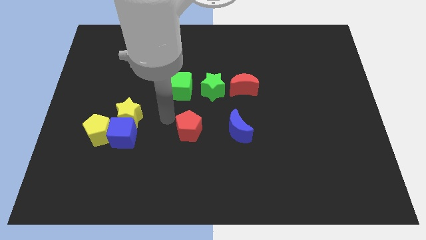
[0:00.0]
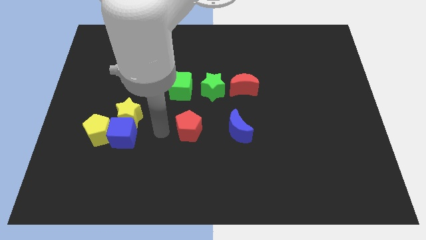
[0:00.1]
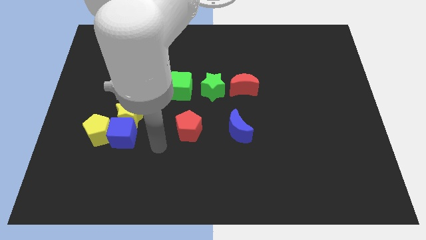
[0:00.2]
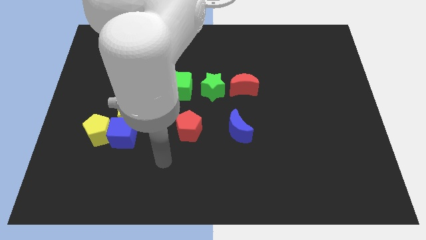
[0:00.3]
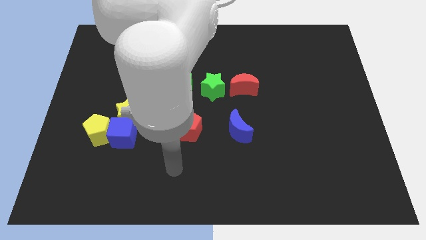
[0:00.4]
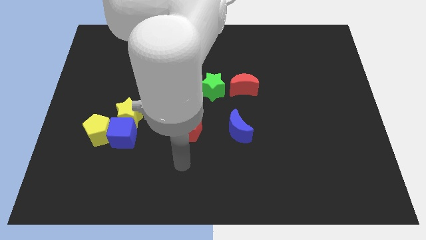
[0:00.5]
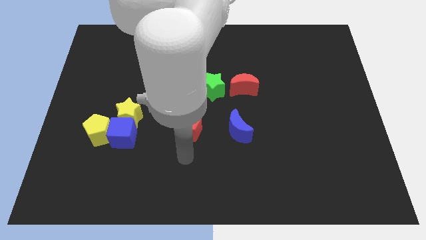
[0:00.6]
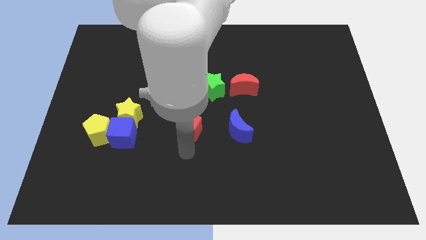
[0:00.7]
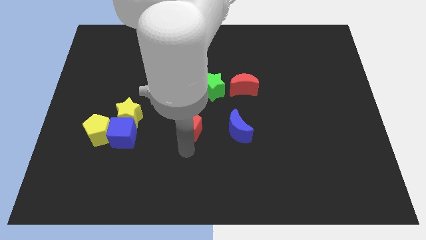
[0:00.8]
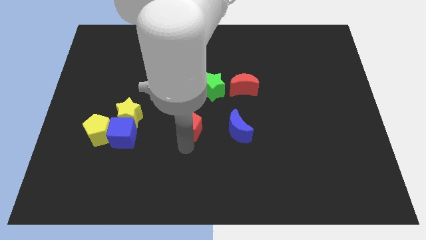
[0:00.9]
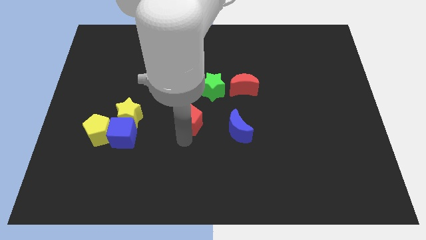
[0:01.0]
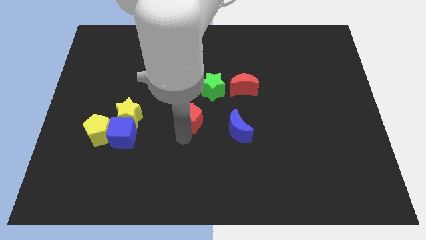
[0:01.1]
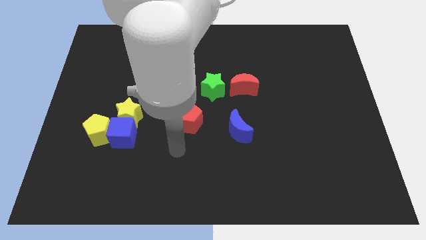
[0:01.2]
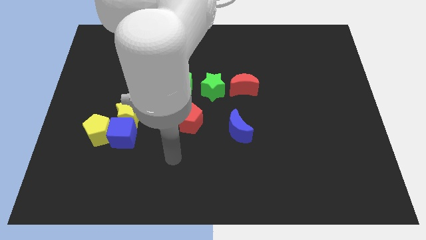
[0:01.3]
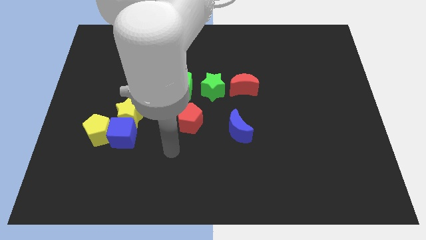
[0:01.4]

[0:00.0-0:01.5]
push the red pentagon slightly upwards

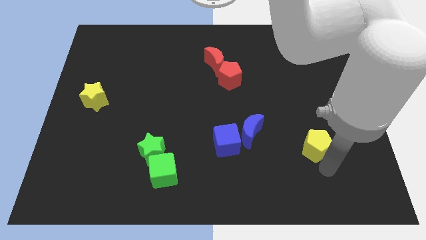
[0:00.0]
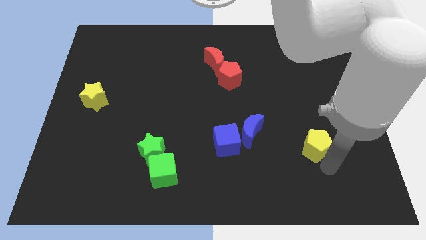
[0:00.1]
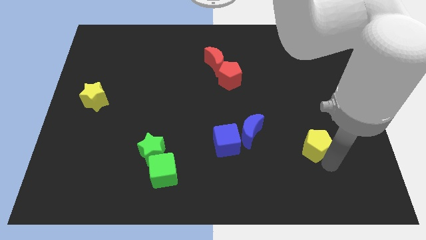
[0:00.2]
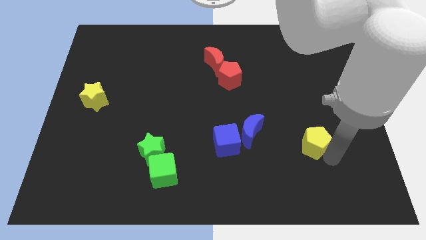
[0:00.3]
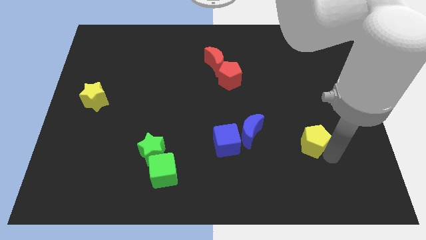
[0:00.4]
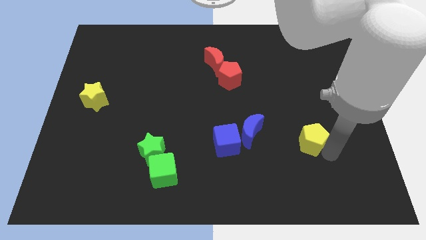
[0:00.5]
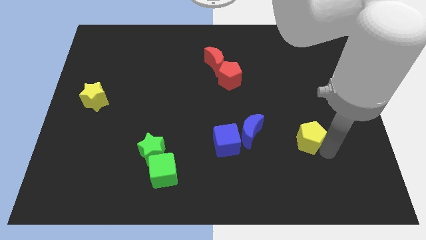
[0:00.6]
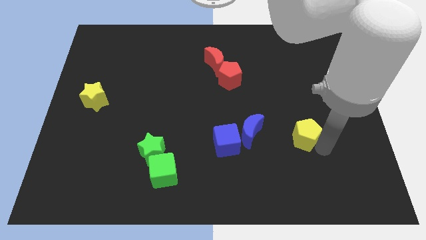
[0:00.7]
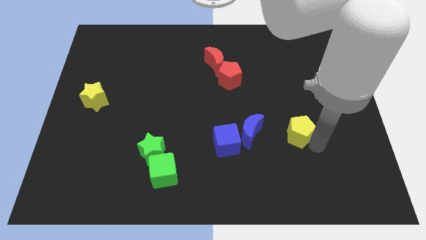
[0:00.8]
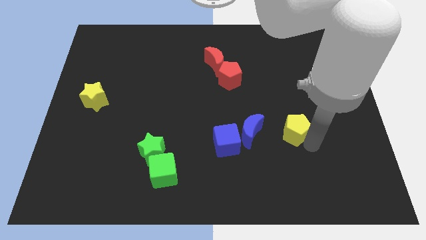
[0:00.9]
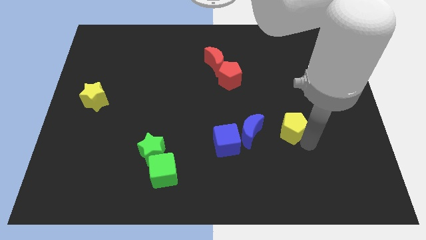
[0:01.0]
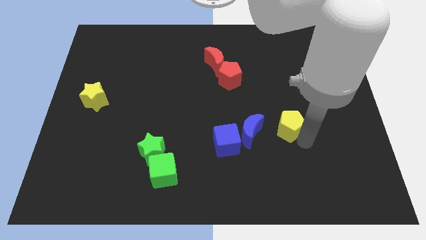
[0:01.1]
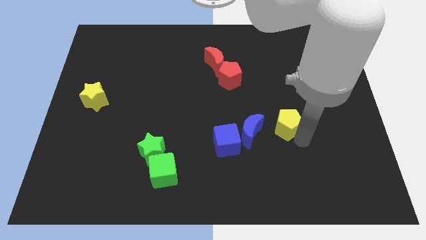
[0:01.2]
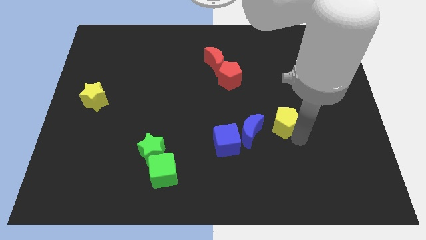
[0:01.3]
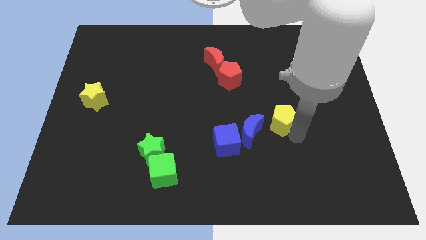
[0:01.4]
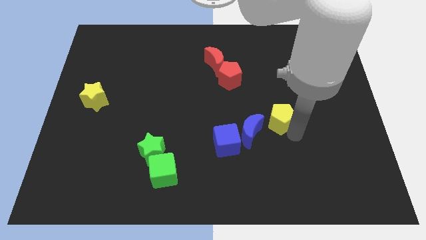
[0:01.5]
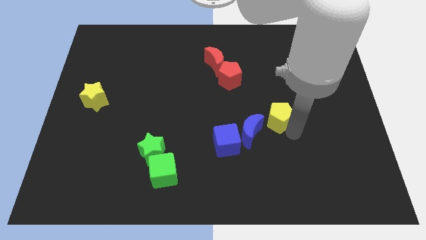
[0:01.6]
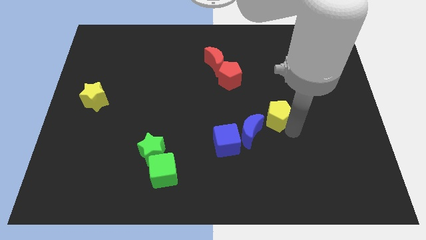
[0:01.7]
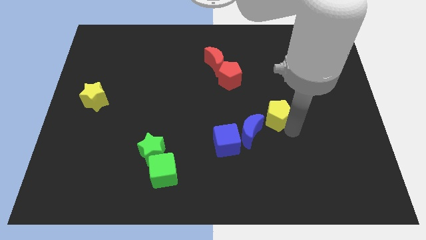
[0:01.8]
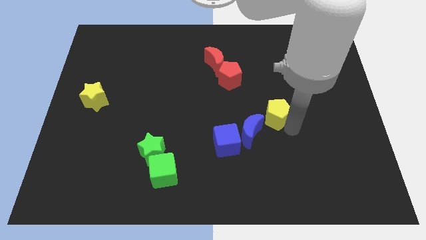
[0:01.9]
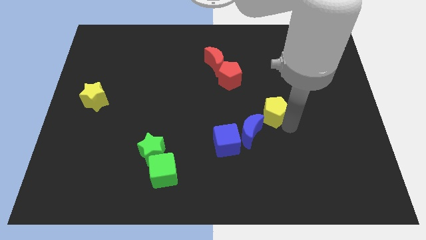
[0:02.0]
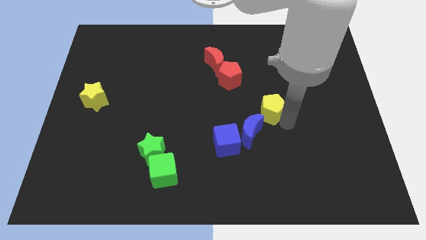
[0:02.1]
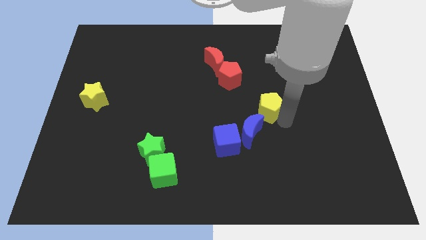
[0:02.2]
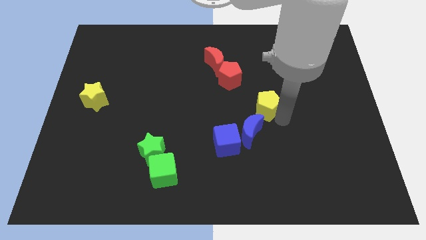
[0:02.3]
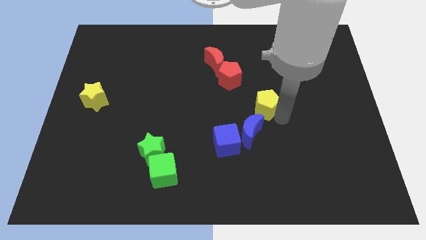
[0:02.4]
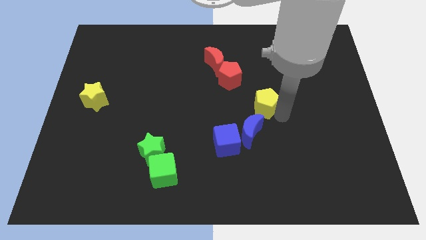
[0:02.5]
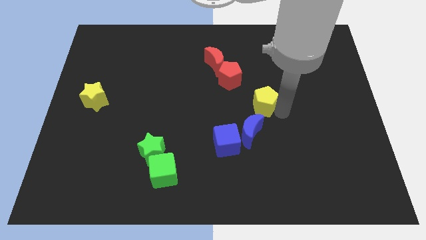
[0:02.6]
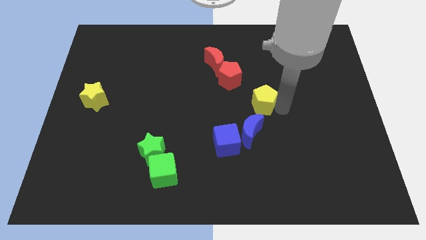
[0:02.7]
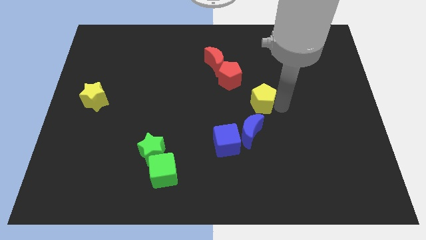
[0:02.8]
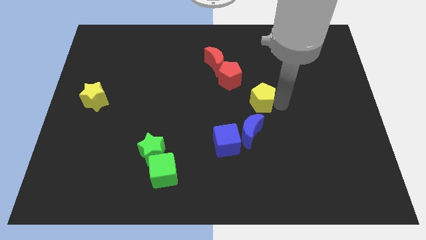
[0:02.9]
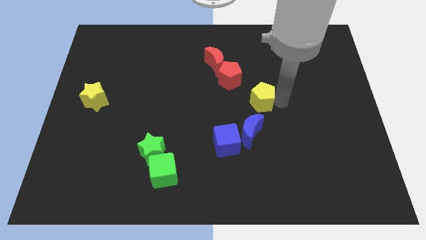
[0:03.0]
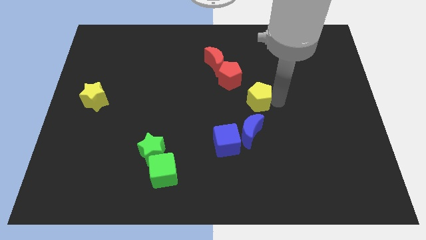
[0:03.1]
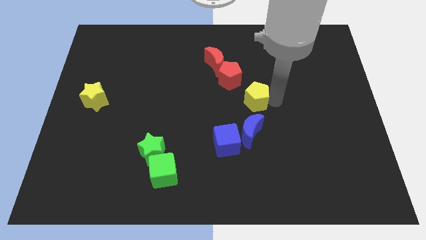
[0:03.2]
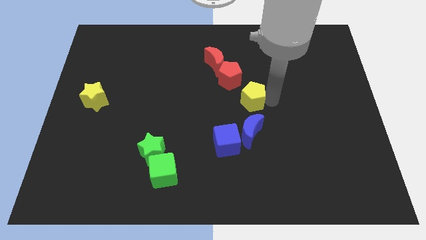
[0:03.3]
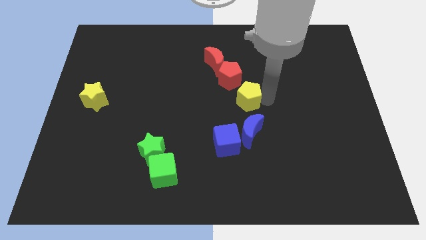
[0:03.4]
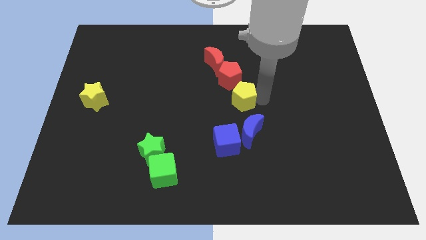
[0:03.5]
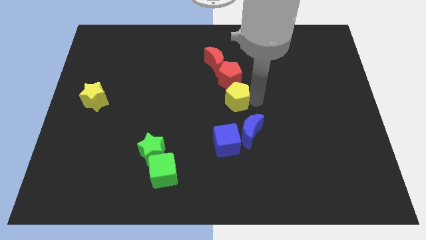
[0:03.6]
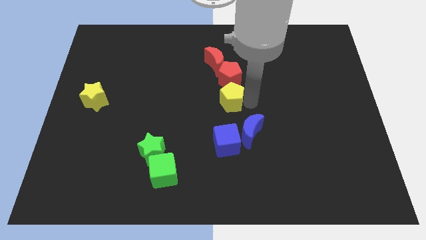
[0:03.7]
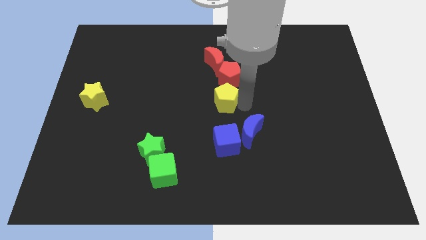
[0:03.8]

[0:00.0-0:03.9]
place the yellow pentagon to the bottom of the red pentagon

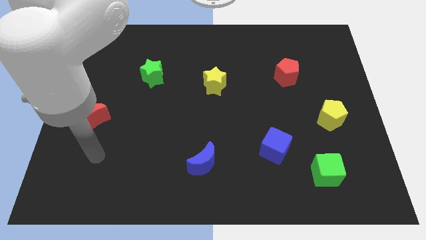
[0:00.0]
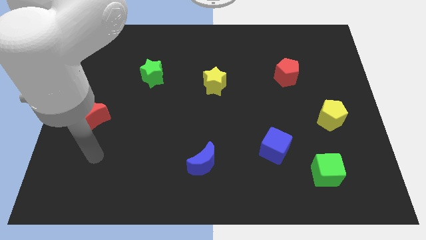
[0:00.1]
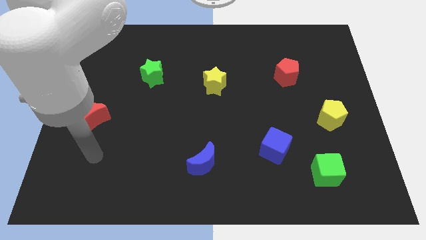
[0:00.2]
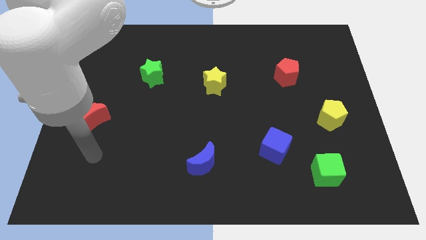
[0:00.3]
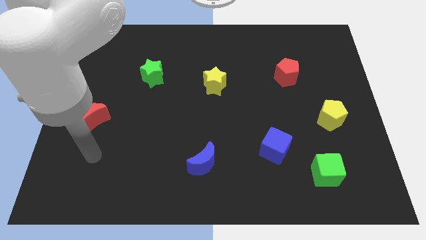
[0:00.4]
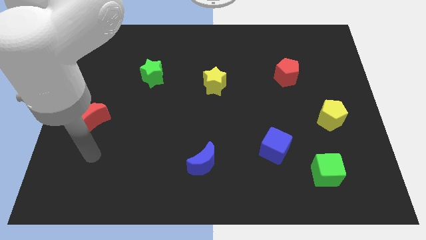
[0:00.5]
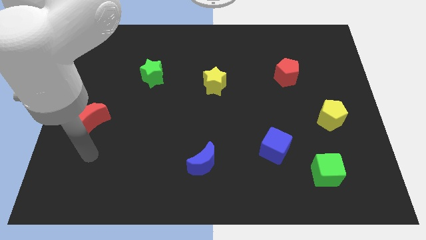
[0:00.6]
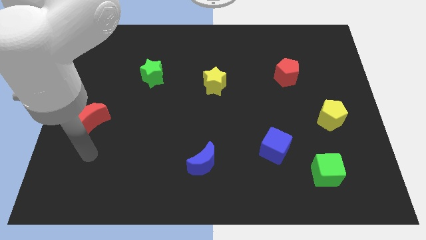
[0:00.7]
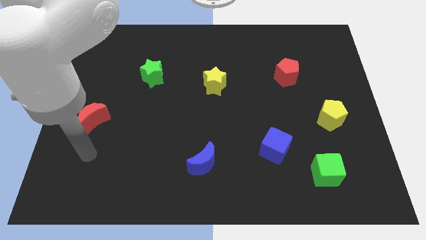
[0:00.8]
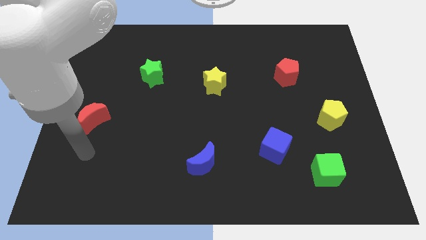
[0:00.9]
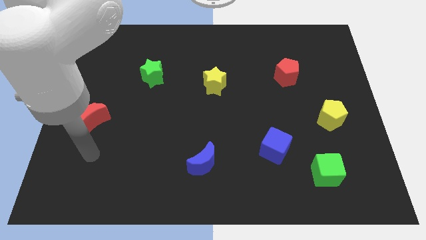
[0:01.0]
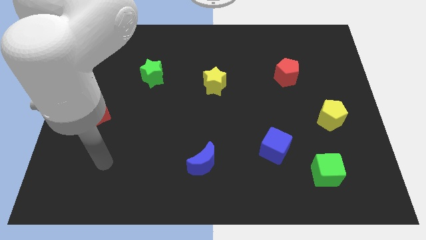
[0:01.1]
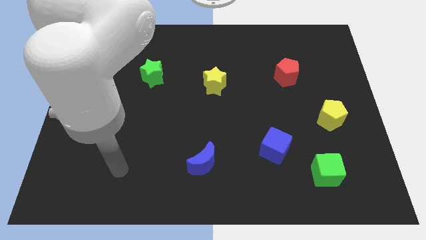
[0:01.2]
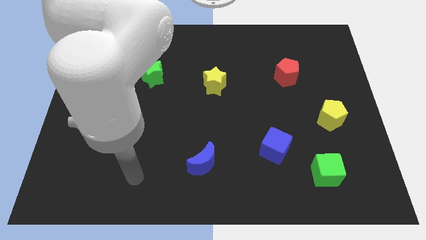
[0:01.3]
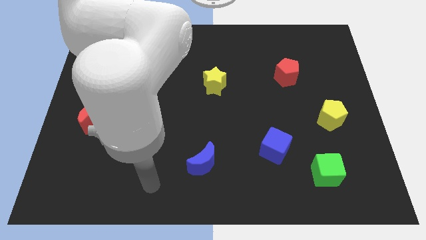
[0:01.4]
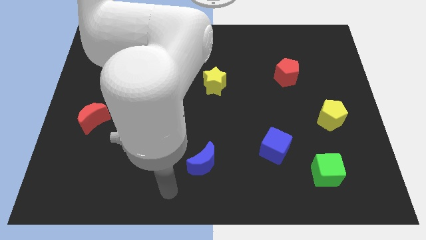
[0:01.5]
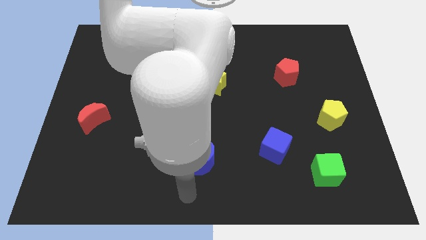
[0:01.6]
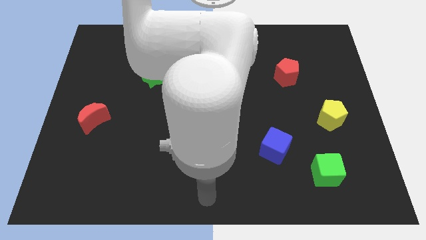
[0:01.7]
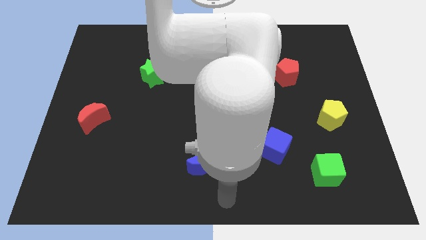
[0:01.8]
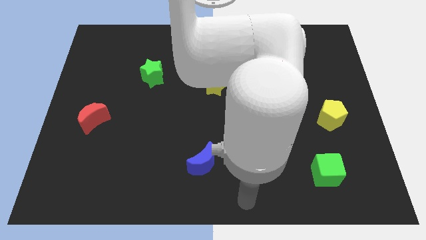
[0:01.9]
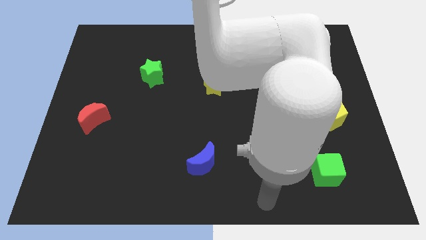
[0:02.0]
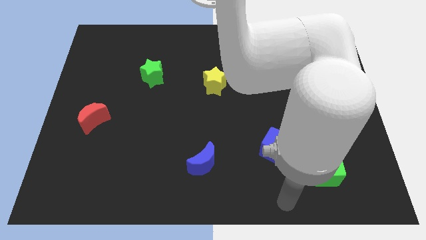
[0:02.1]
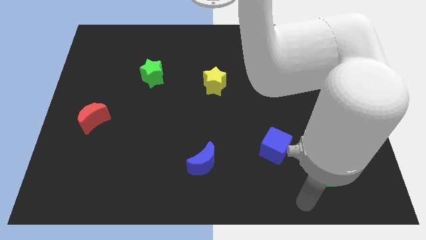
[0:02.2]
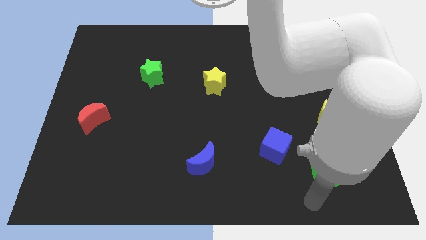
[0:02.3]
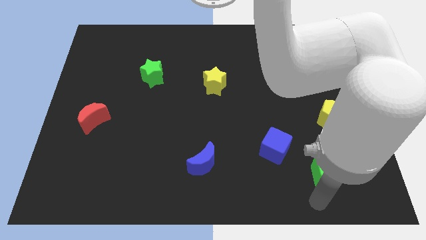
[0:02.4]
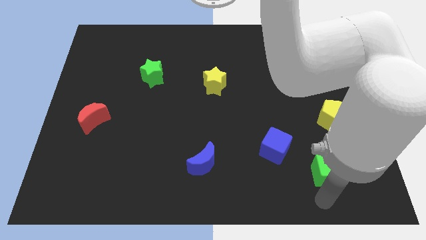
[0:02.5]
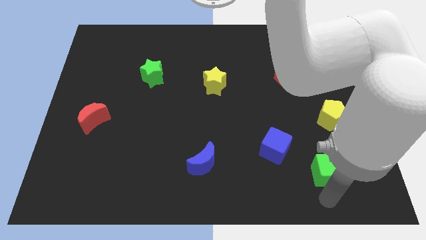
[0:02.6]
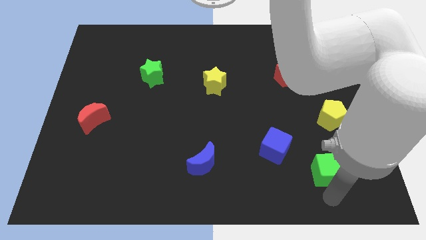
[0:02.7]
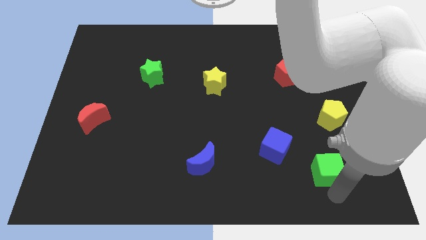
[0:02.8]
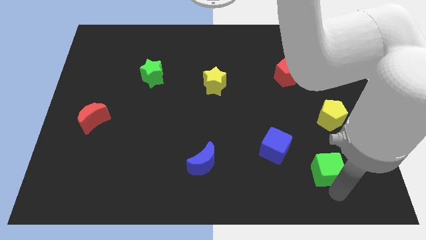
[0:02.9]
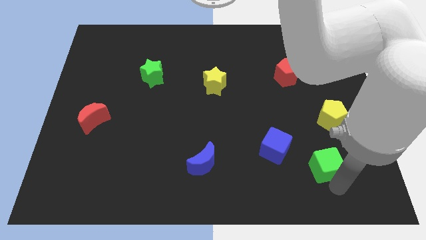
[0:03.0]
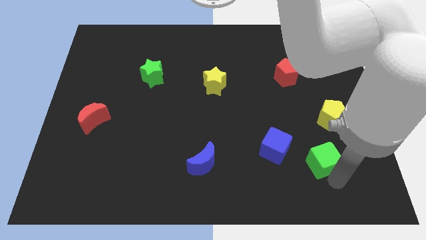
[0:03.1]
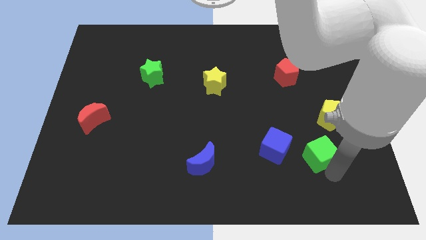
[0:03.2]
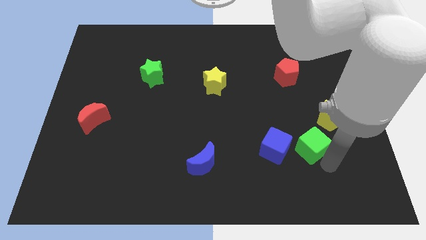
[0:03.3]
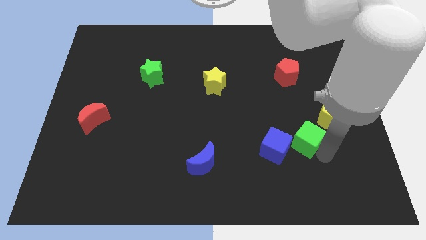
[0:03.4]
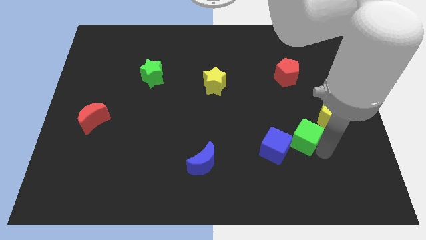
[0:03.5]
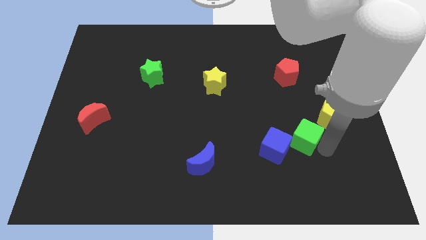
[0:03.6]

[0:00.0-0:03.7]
move your arm towards the green cube
